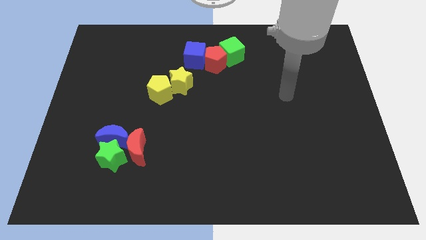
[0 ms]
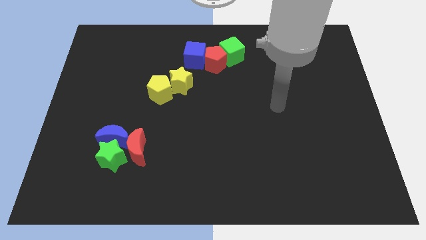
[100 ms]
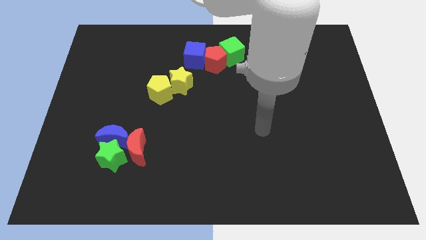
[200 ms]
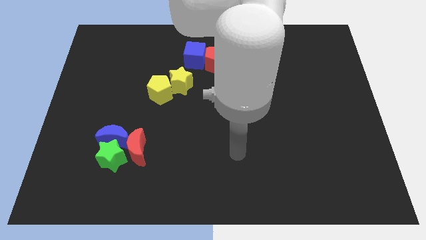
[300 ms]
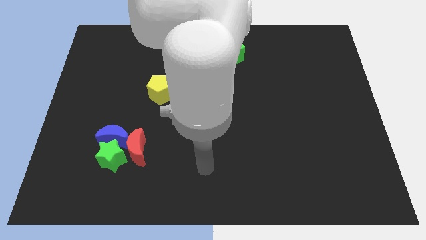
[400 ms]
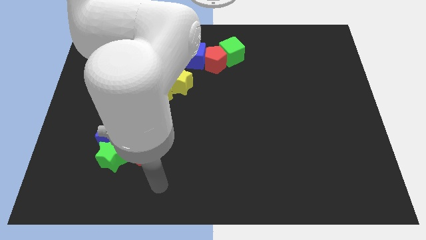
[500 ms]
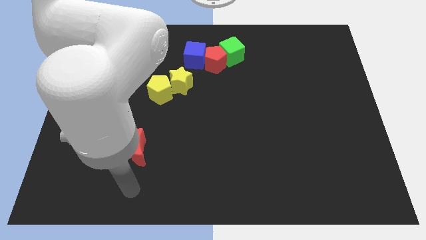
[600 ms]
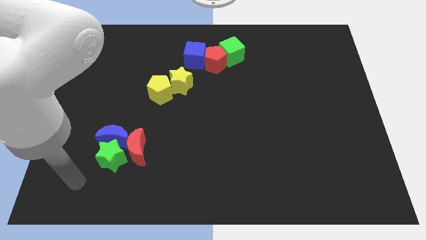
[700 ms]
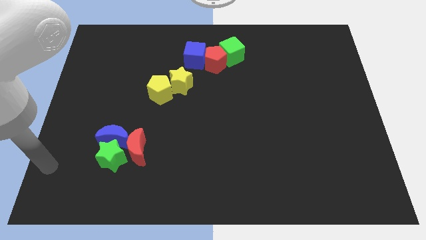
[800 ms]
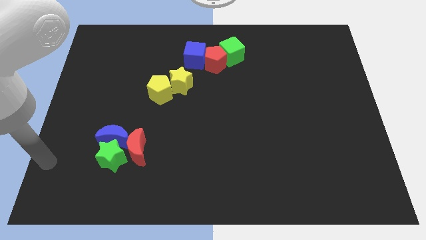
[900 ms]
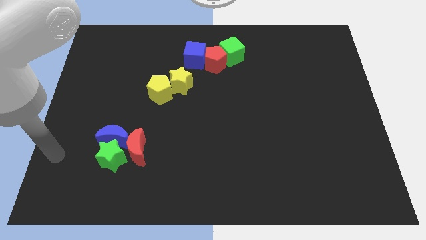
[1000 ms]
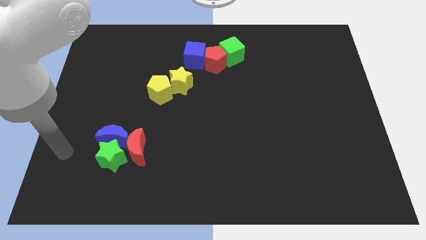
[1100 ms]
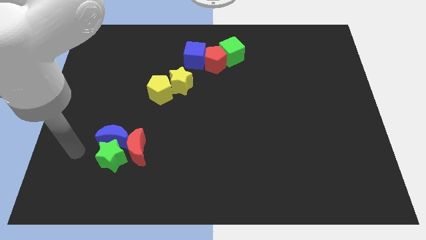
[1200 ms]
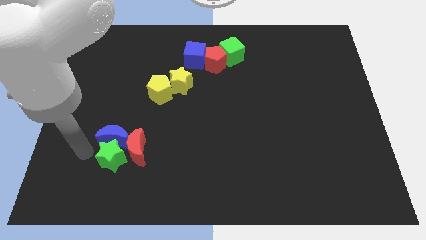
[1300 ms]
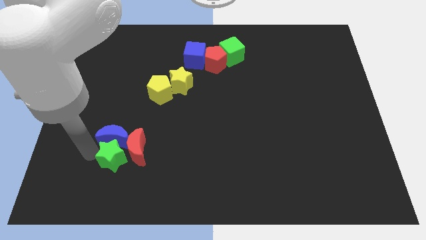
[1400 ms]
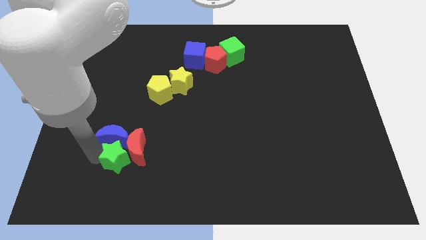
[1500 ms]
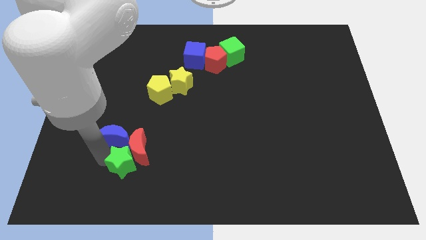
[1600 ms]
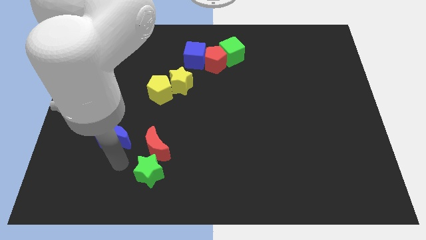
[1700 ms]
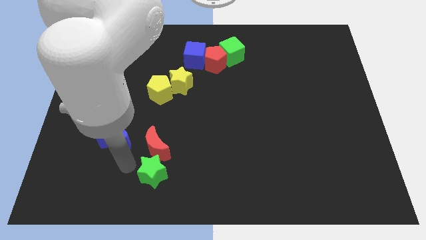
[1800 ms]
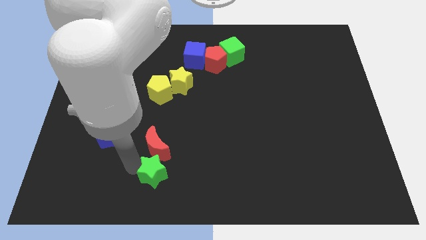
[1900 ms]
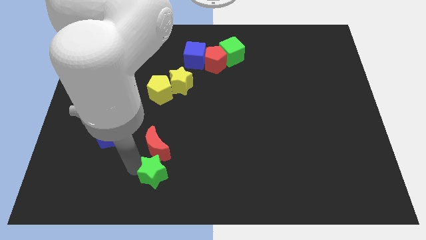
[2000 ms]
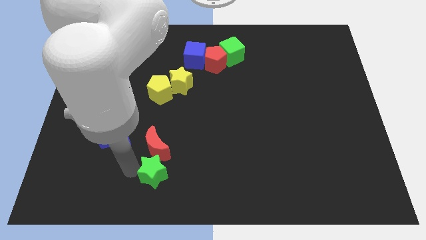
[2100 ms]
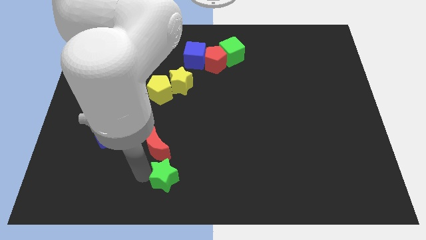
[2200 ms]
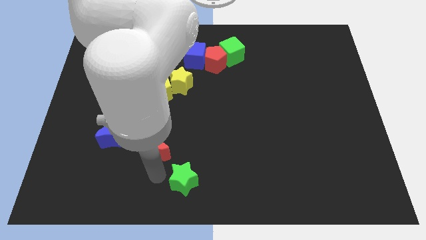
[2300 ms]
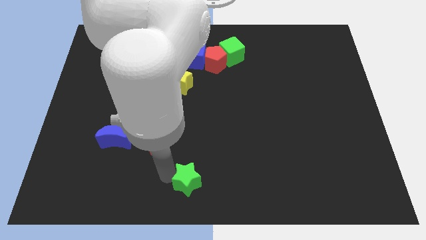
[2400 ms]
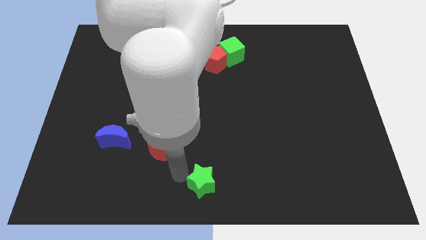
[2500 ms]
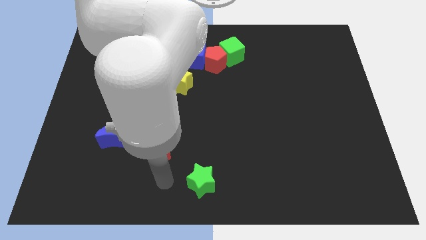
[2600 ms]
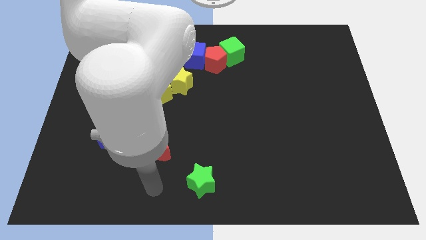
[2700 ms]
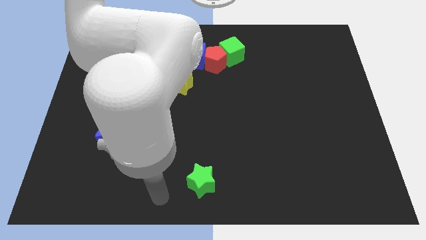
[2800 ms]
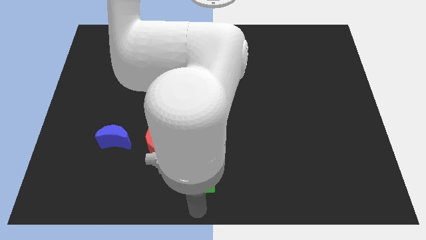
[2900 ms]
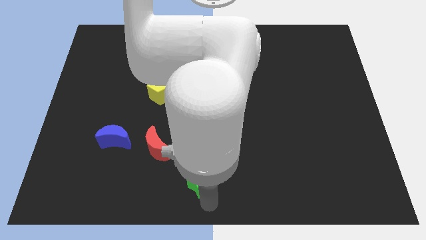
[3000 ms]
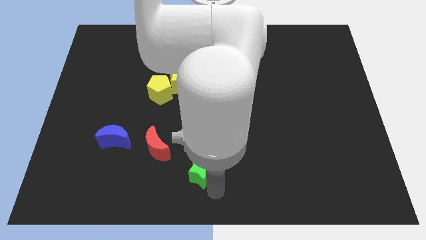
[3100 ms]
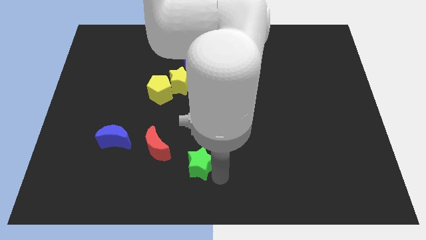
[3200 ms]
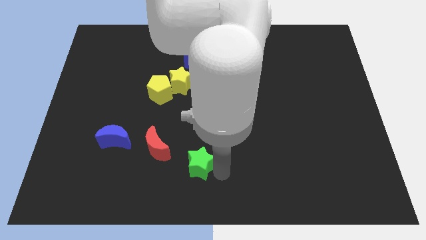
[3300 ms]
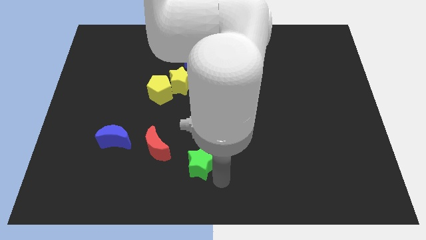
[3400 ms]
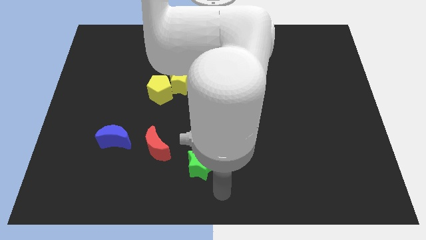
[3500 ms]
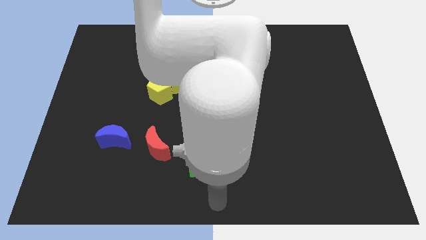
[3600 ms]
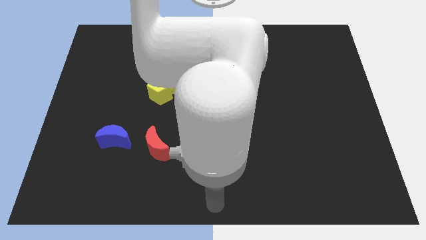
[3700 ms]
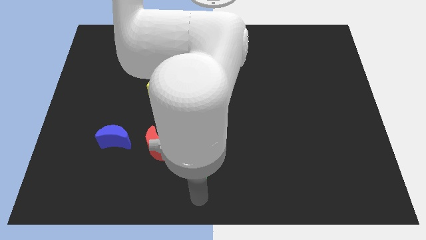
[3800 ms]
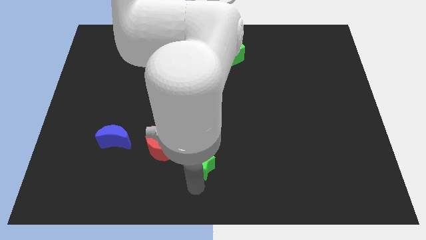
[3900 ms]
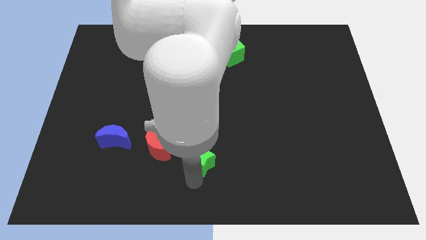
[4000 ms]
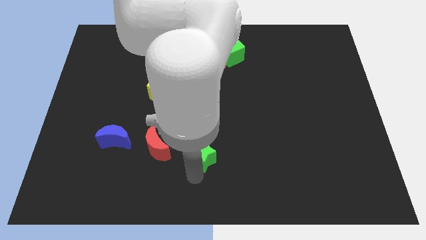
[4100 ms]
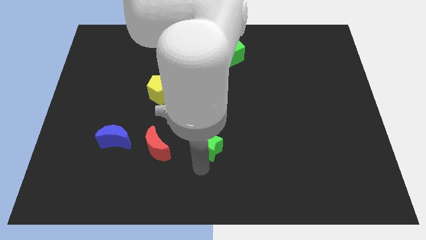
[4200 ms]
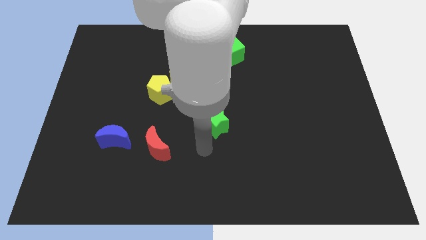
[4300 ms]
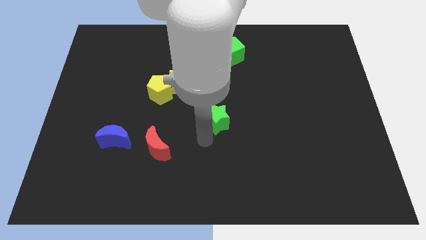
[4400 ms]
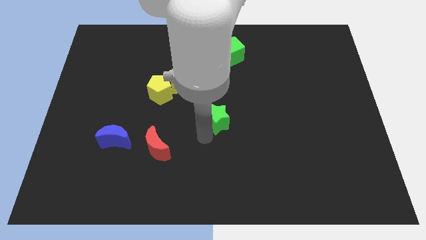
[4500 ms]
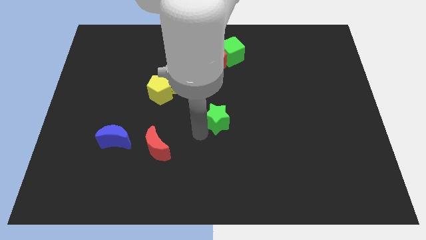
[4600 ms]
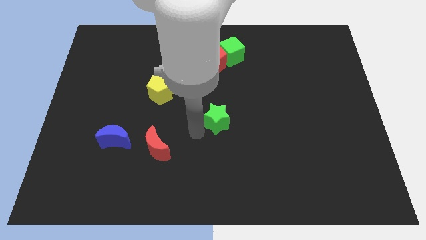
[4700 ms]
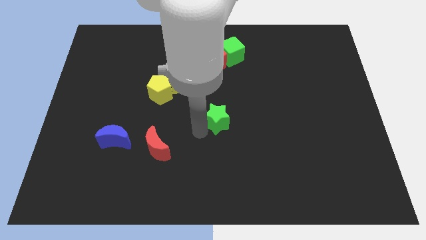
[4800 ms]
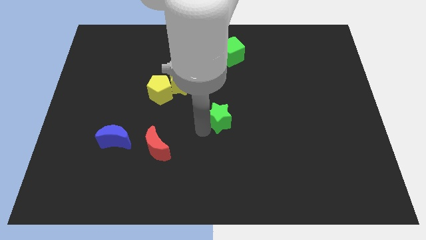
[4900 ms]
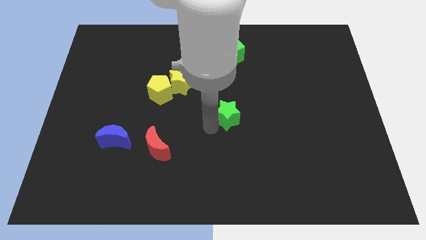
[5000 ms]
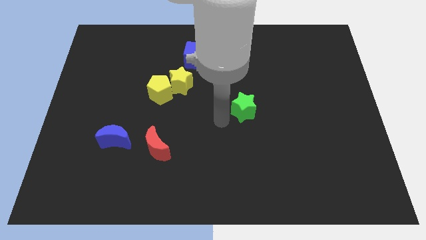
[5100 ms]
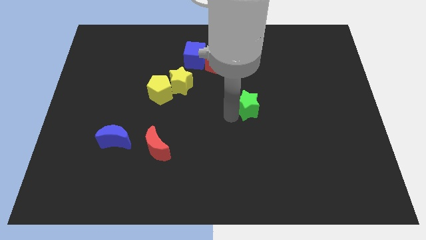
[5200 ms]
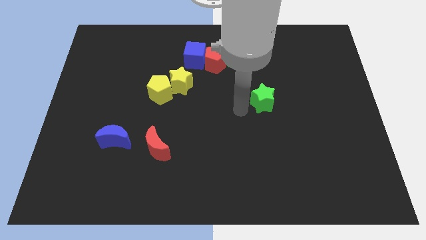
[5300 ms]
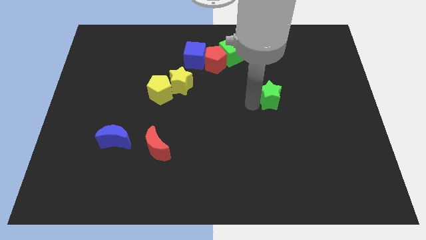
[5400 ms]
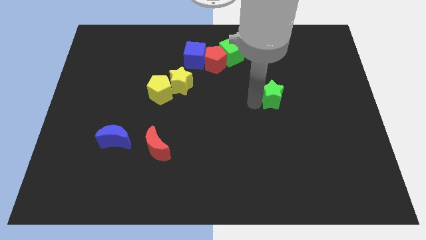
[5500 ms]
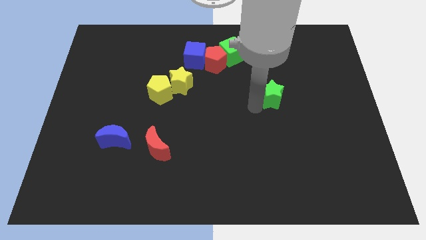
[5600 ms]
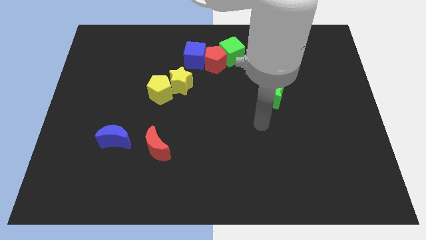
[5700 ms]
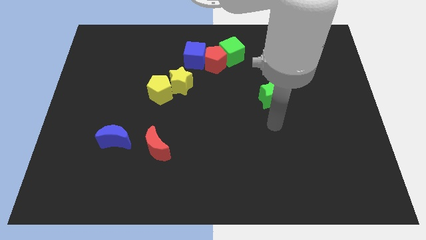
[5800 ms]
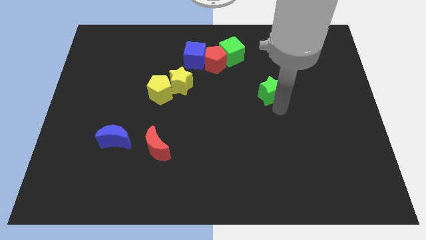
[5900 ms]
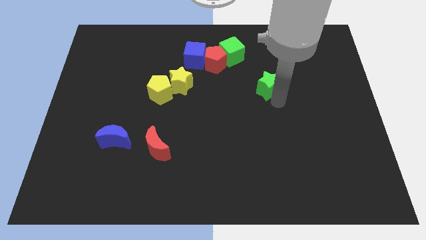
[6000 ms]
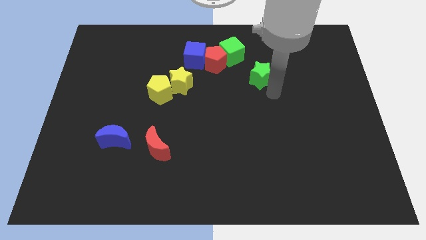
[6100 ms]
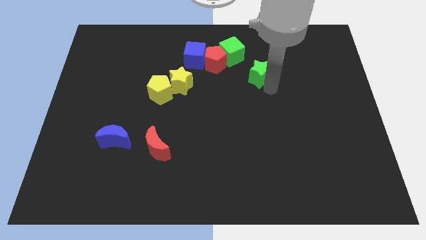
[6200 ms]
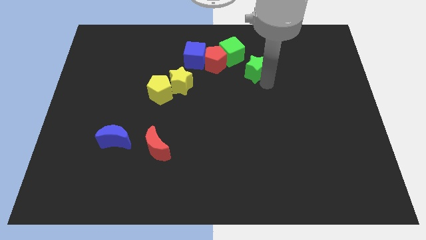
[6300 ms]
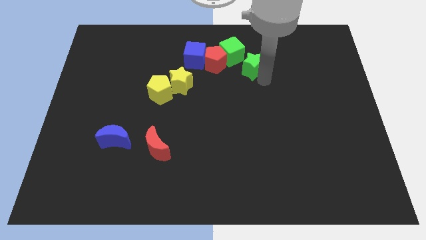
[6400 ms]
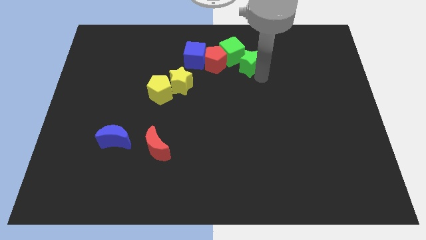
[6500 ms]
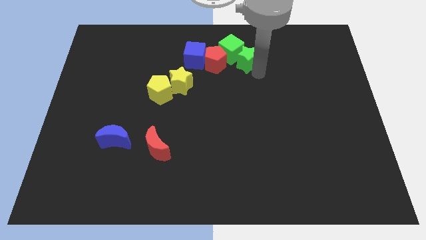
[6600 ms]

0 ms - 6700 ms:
put the green star towards the green cube

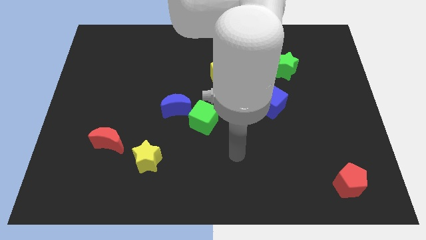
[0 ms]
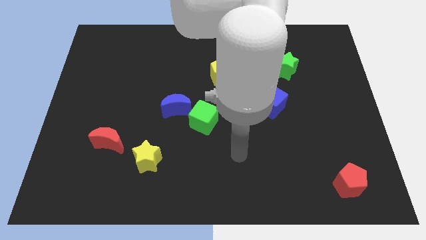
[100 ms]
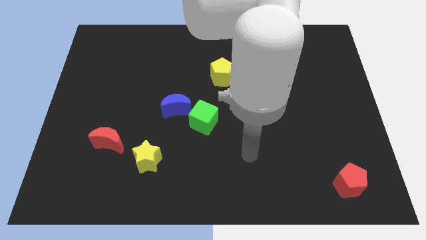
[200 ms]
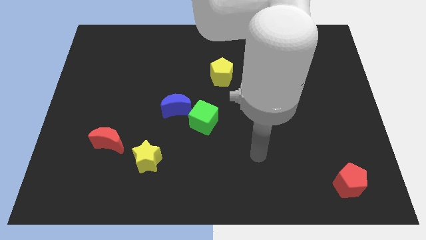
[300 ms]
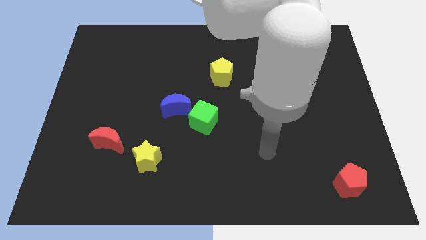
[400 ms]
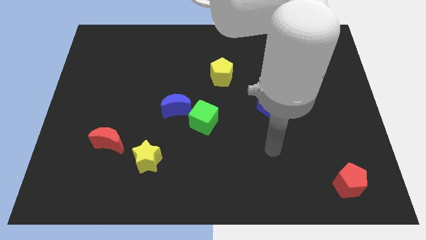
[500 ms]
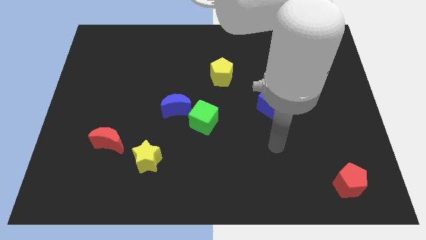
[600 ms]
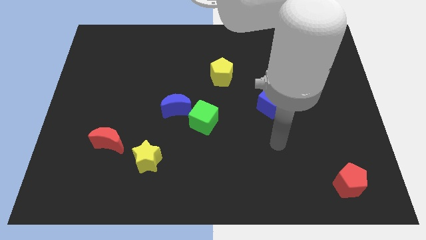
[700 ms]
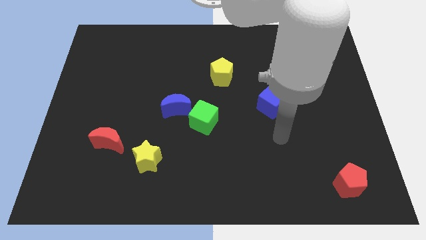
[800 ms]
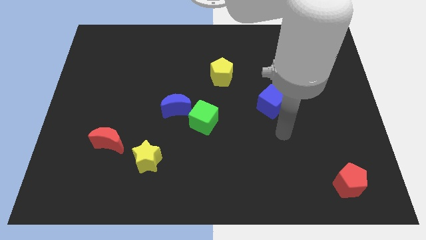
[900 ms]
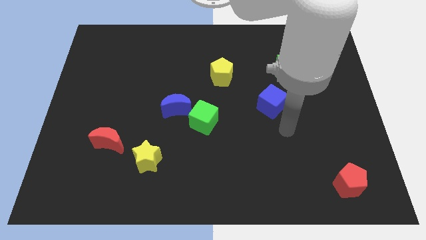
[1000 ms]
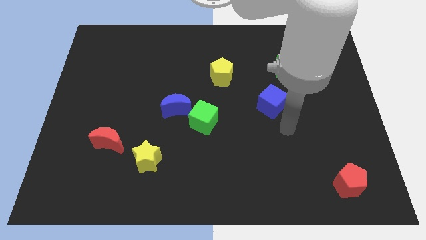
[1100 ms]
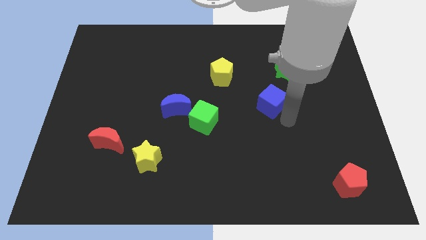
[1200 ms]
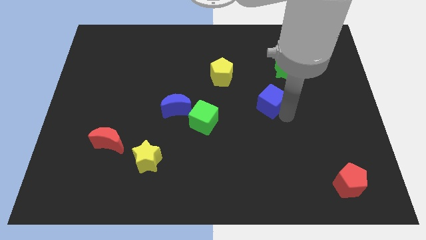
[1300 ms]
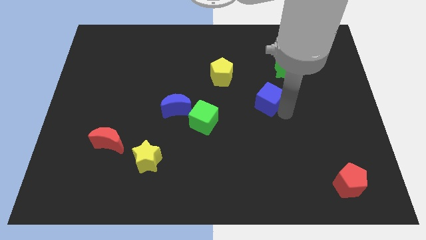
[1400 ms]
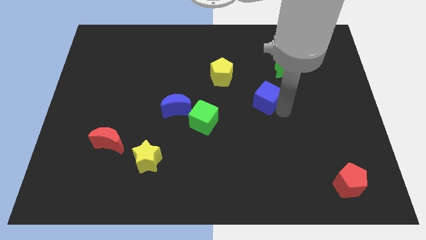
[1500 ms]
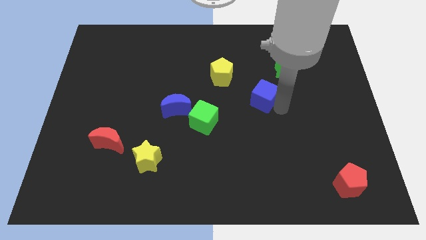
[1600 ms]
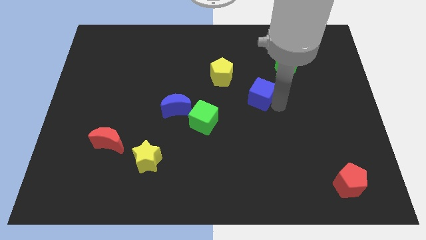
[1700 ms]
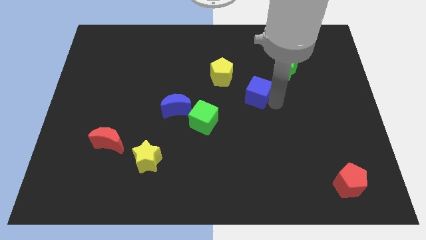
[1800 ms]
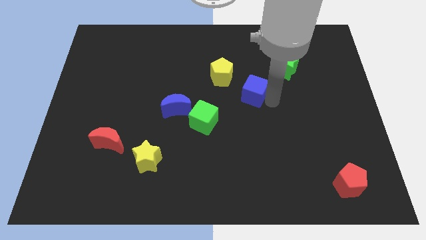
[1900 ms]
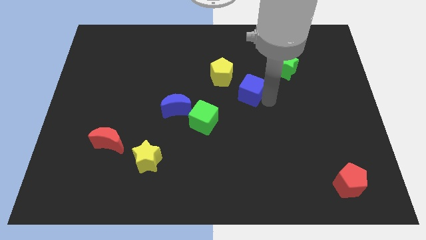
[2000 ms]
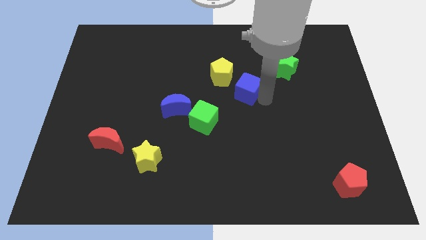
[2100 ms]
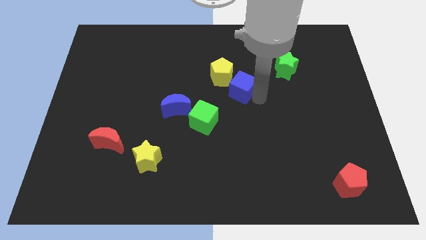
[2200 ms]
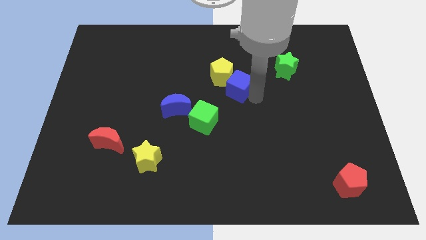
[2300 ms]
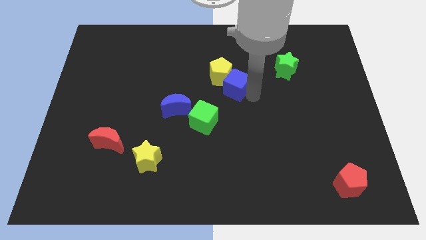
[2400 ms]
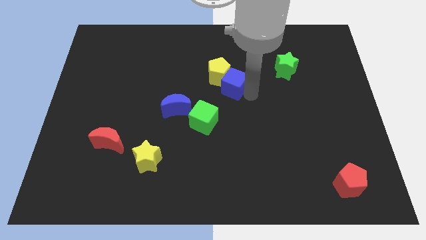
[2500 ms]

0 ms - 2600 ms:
put the blue cube towards the yellow pentagon
